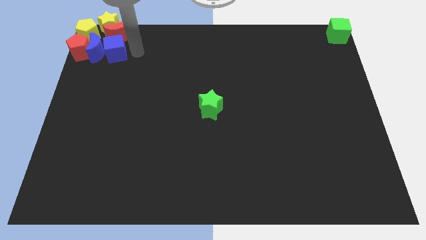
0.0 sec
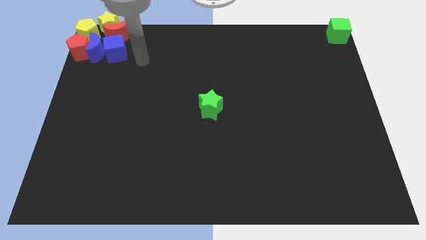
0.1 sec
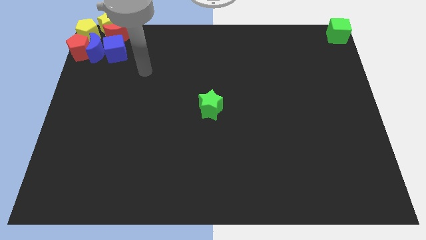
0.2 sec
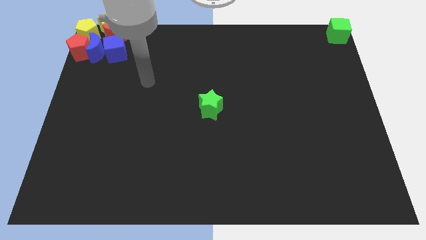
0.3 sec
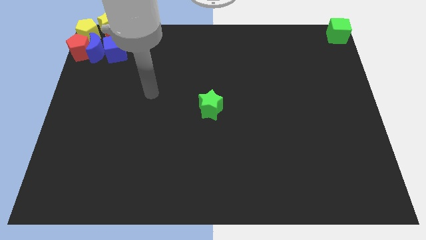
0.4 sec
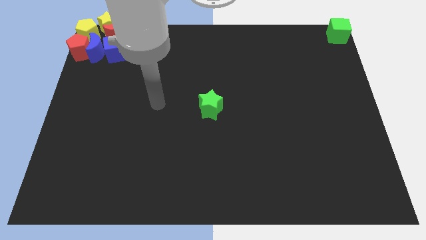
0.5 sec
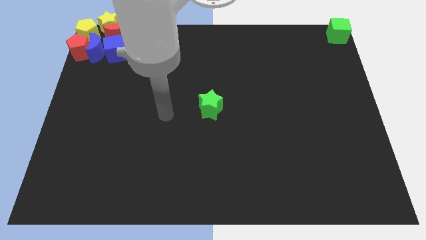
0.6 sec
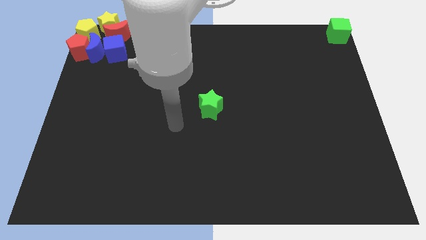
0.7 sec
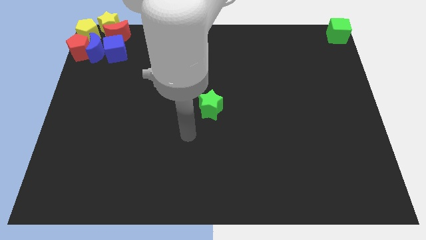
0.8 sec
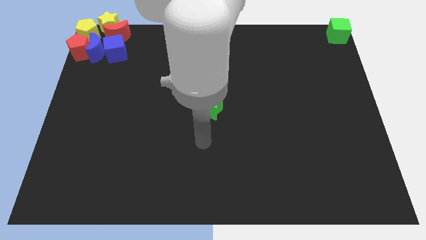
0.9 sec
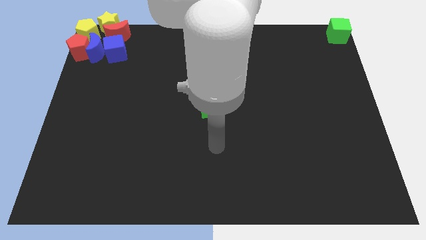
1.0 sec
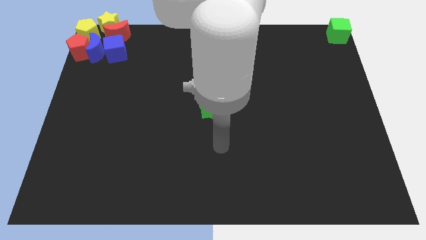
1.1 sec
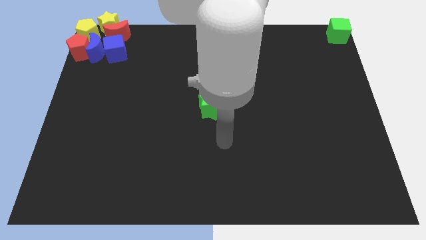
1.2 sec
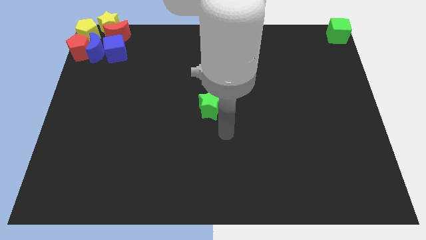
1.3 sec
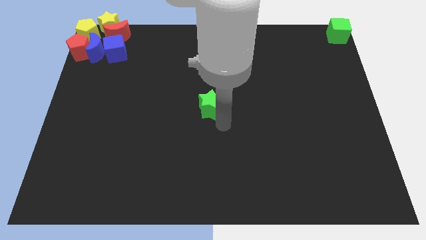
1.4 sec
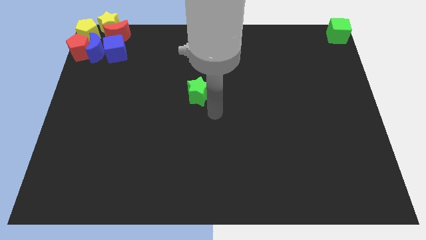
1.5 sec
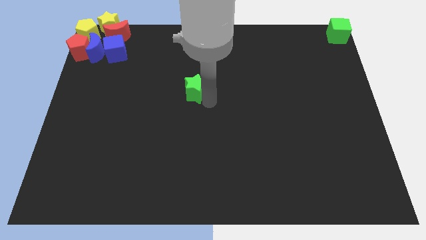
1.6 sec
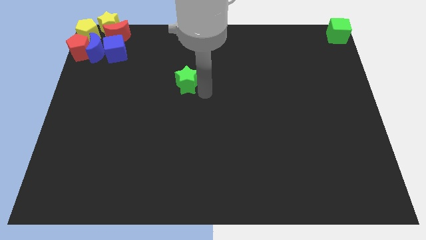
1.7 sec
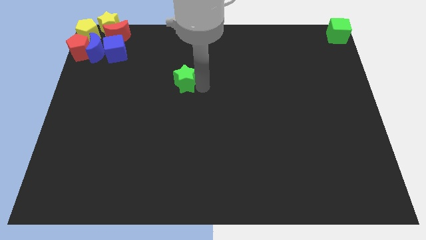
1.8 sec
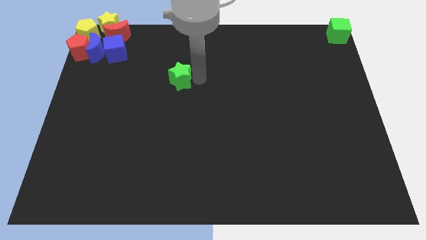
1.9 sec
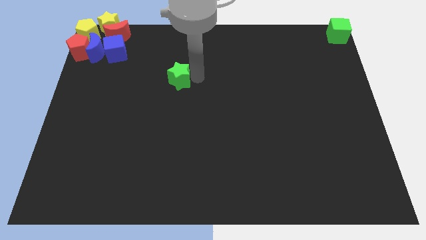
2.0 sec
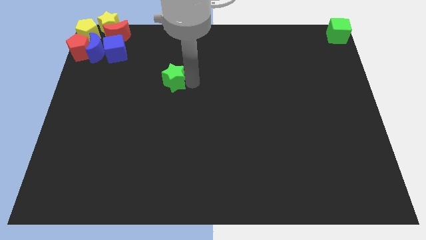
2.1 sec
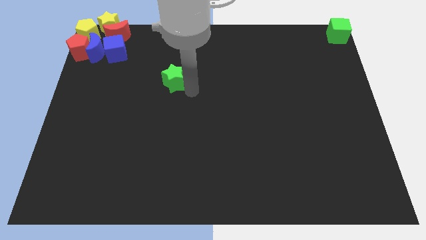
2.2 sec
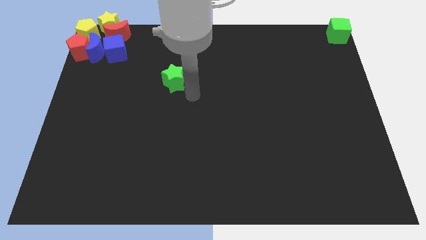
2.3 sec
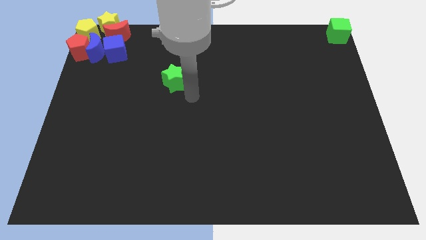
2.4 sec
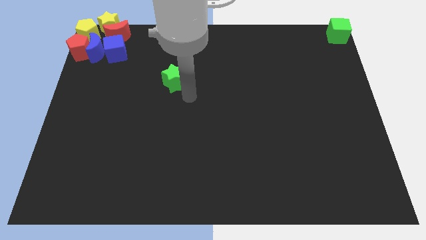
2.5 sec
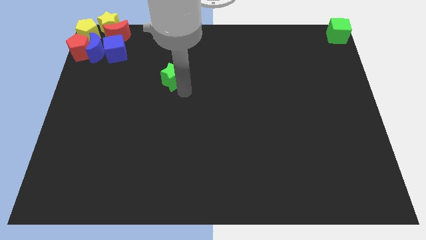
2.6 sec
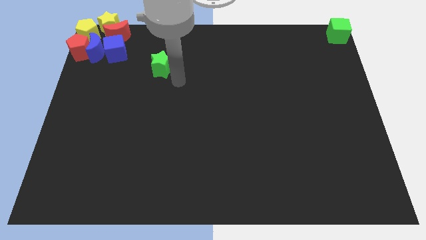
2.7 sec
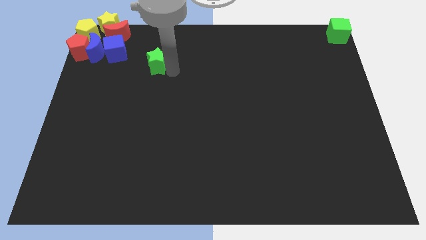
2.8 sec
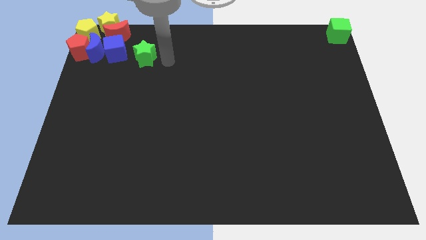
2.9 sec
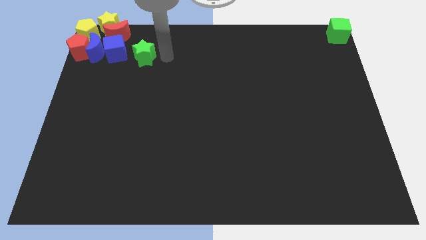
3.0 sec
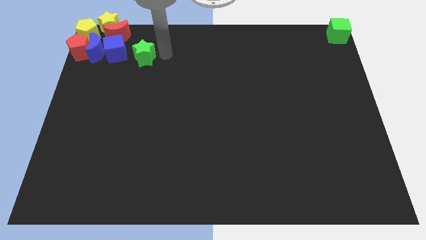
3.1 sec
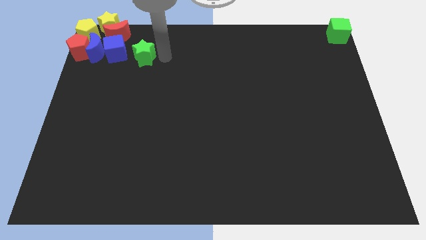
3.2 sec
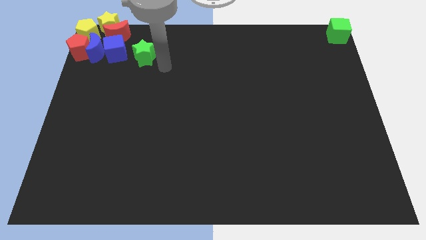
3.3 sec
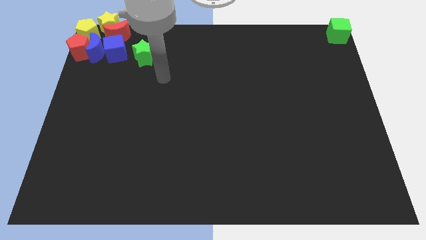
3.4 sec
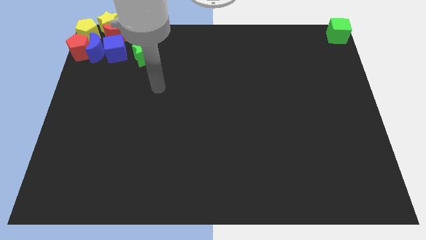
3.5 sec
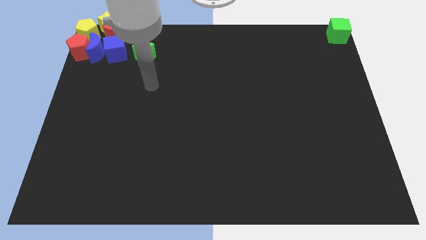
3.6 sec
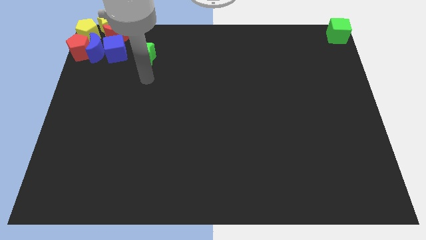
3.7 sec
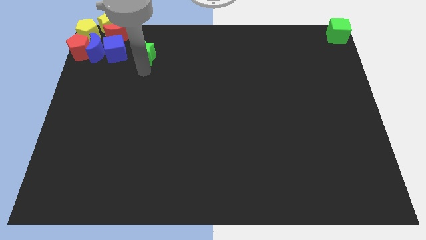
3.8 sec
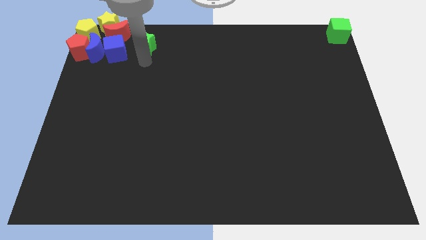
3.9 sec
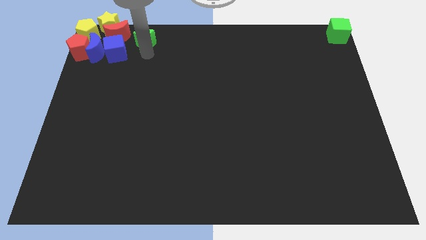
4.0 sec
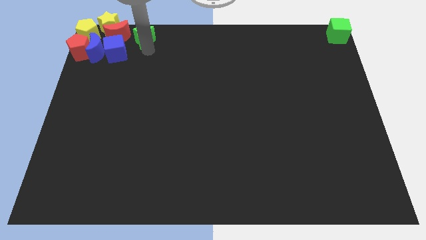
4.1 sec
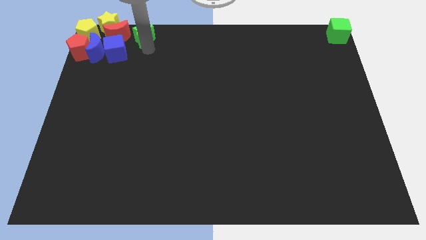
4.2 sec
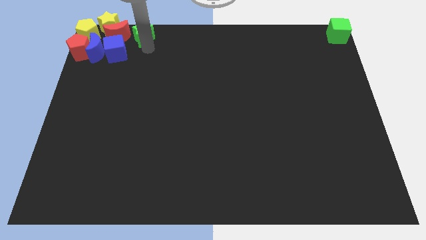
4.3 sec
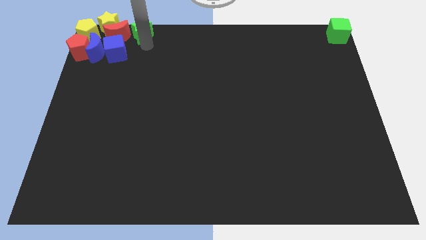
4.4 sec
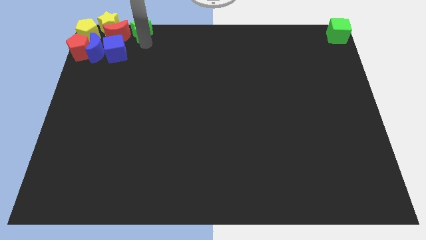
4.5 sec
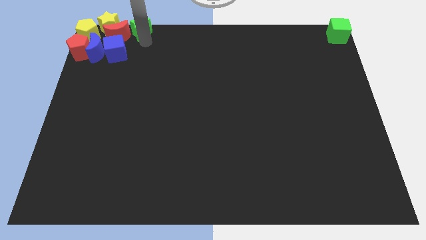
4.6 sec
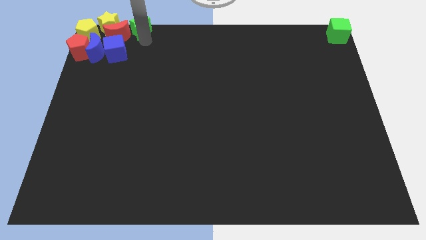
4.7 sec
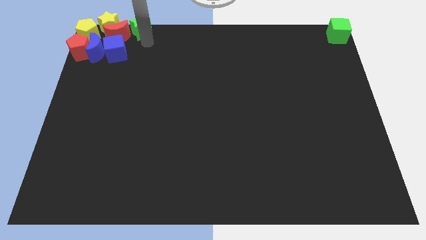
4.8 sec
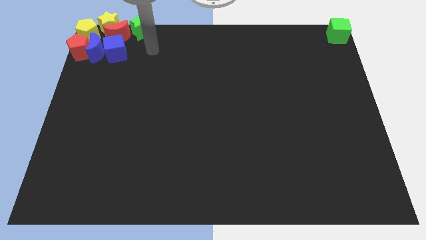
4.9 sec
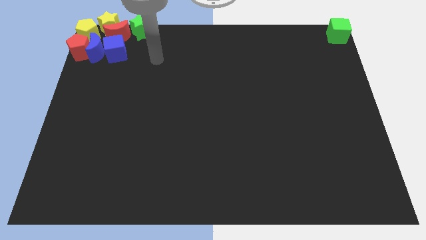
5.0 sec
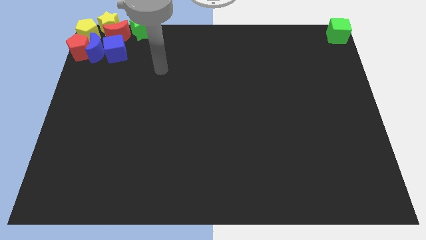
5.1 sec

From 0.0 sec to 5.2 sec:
place green star to the right of the red crescent

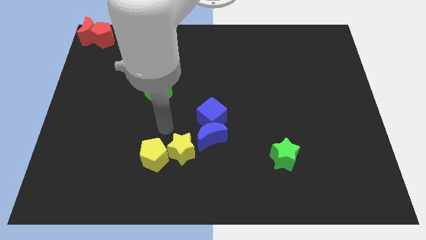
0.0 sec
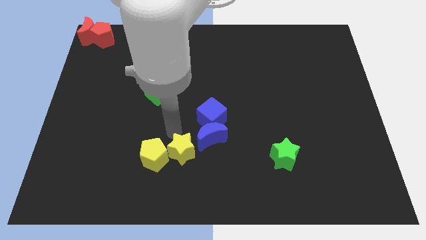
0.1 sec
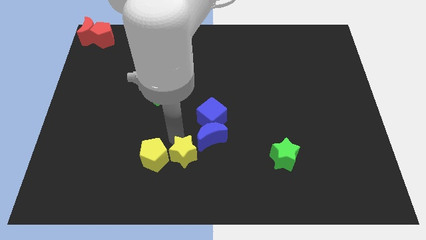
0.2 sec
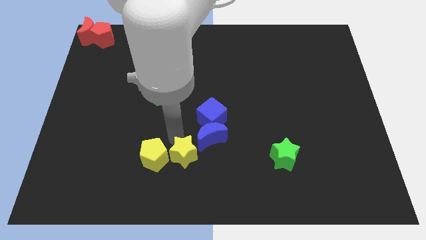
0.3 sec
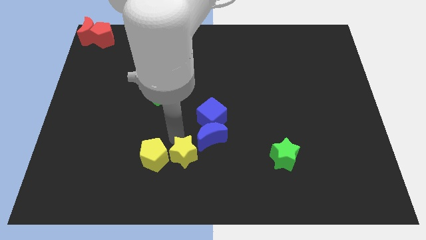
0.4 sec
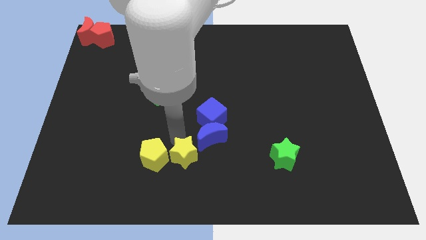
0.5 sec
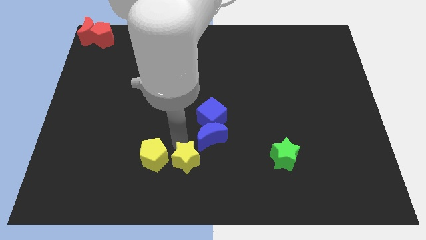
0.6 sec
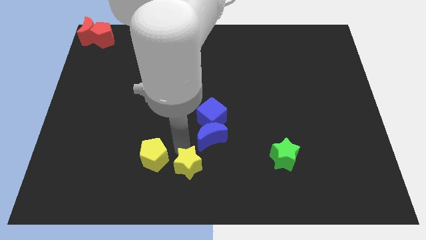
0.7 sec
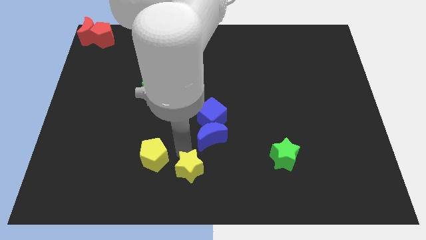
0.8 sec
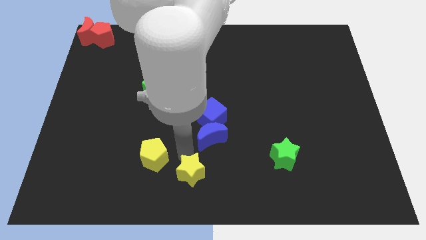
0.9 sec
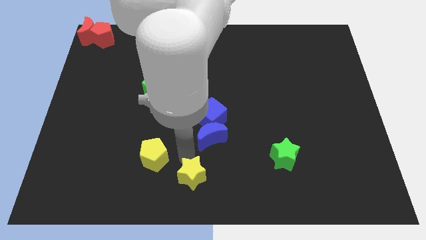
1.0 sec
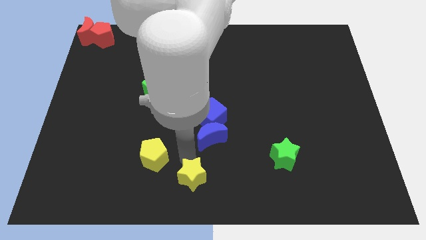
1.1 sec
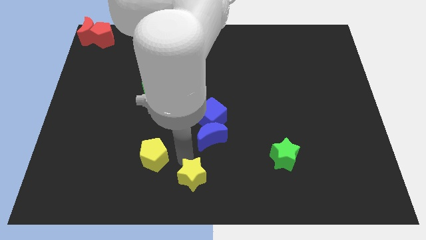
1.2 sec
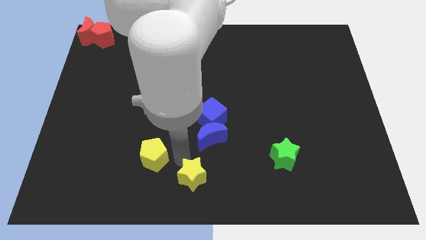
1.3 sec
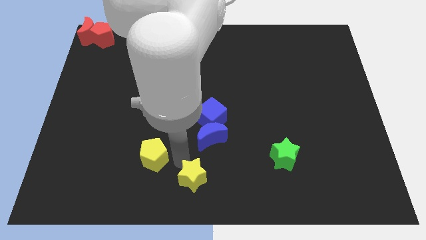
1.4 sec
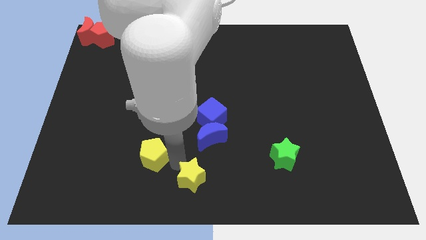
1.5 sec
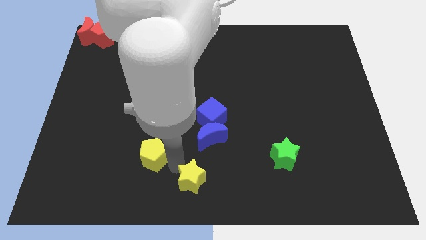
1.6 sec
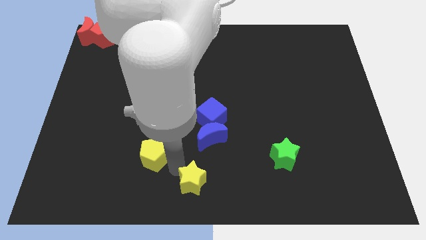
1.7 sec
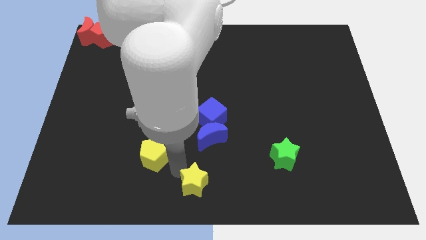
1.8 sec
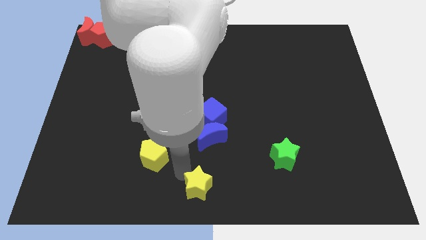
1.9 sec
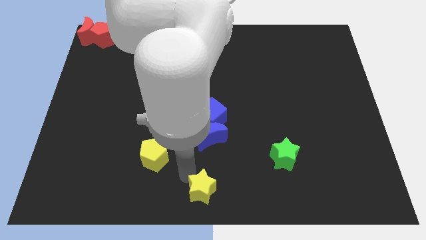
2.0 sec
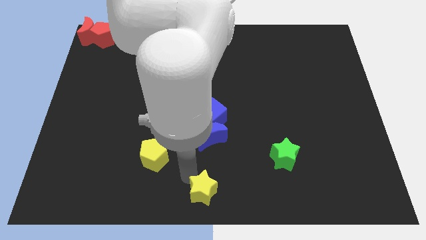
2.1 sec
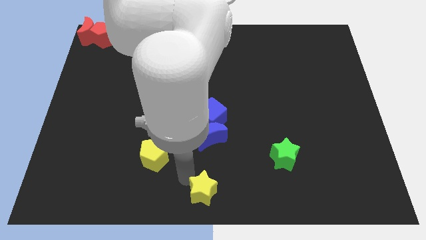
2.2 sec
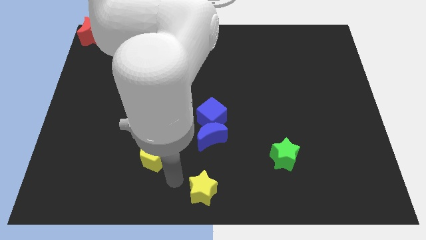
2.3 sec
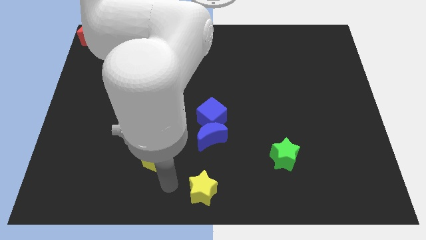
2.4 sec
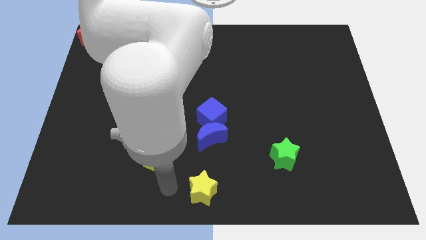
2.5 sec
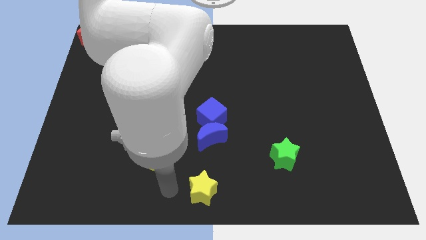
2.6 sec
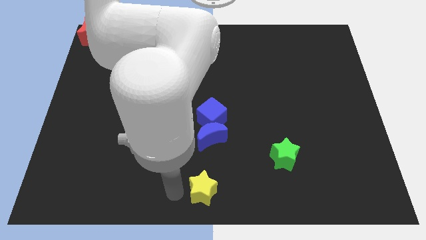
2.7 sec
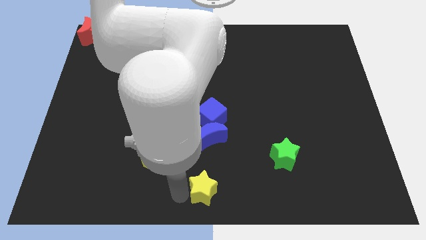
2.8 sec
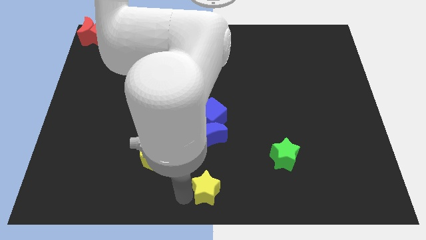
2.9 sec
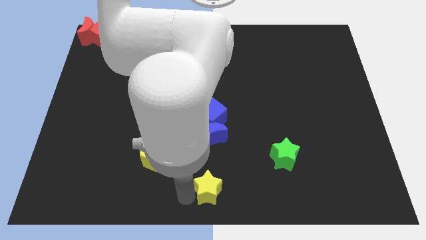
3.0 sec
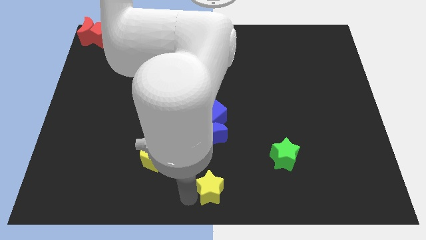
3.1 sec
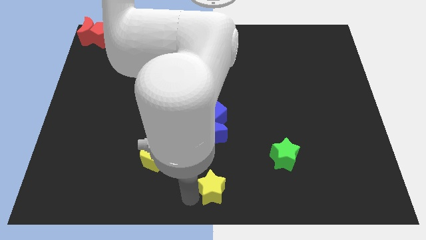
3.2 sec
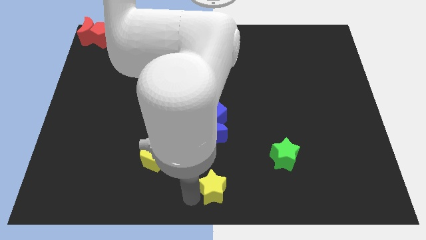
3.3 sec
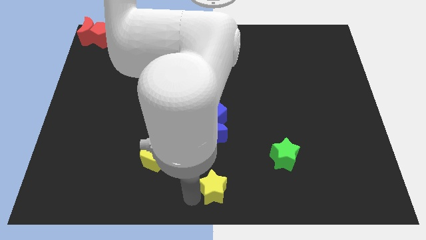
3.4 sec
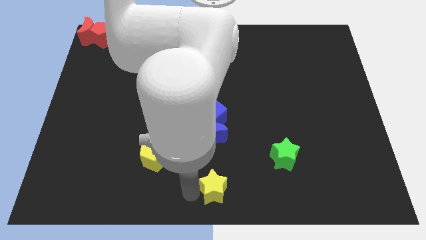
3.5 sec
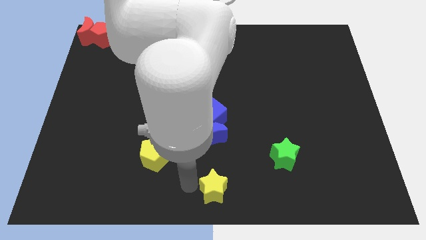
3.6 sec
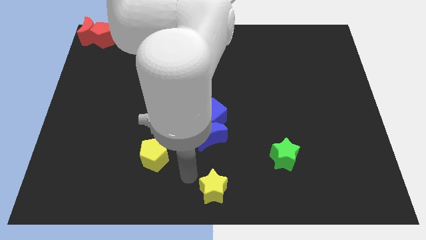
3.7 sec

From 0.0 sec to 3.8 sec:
push yellow star below blue crescent
